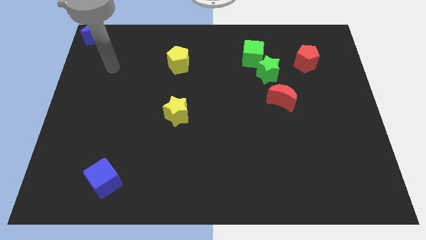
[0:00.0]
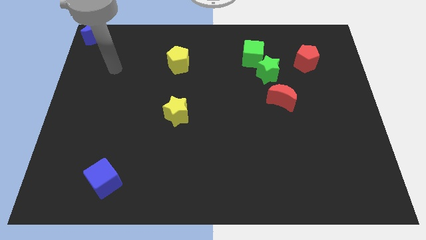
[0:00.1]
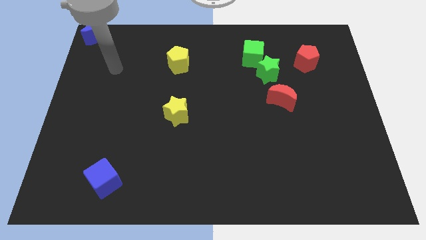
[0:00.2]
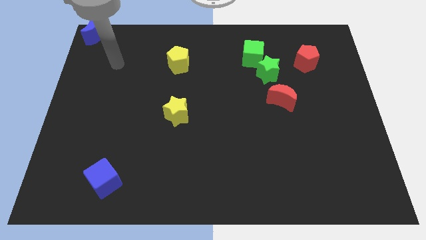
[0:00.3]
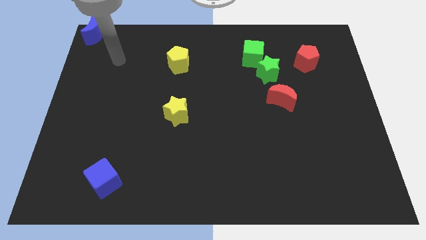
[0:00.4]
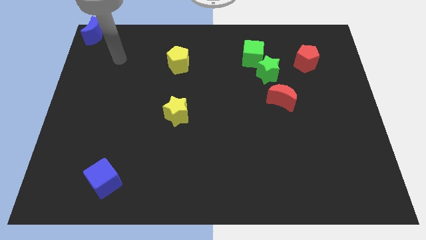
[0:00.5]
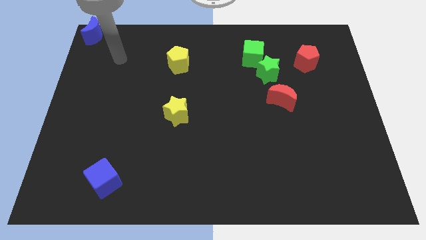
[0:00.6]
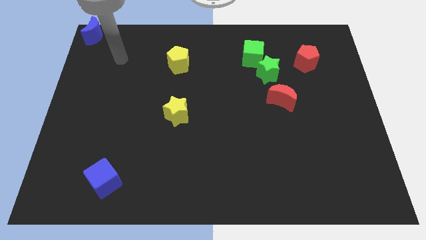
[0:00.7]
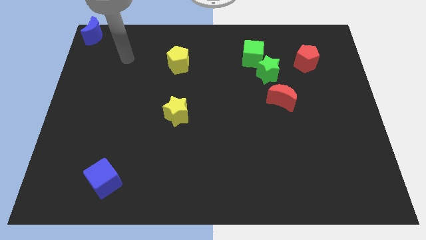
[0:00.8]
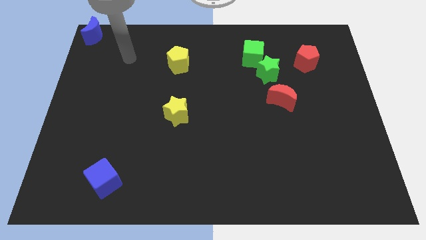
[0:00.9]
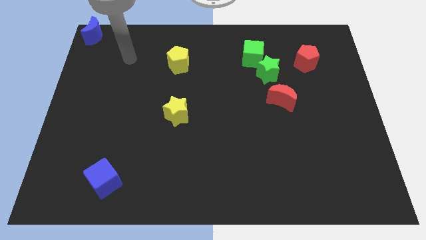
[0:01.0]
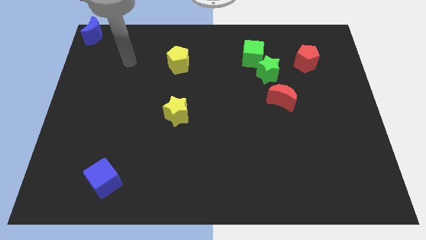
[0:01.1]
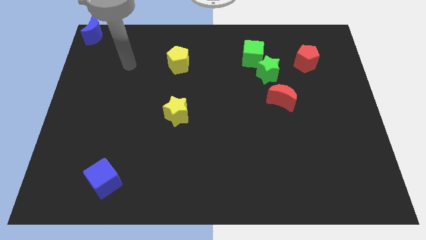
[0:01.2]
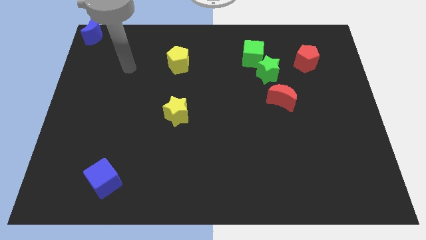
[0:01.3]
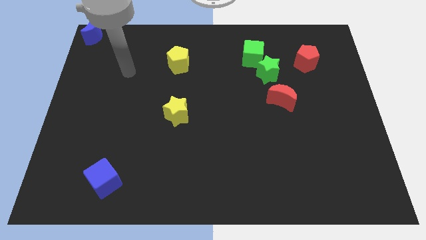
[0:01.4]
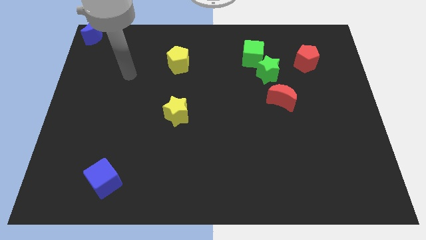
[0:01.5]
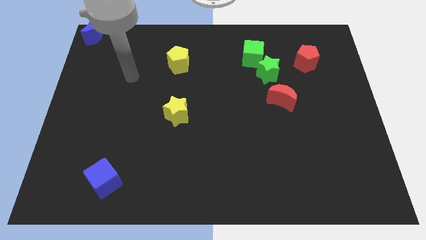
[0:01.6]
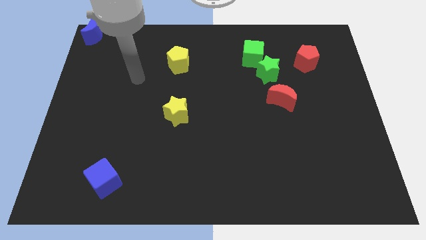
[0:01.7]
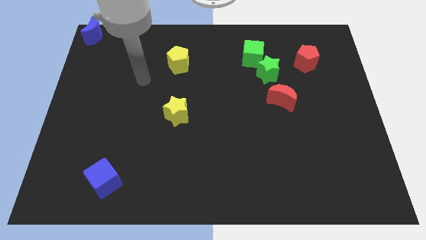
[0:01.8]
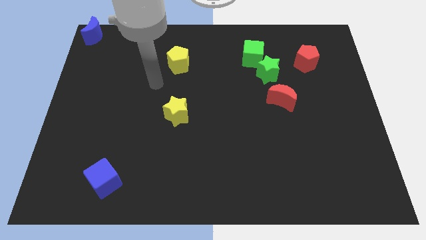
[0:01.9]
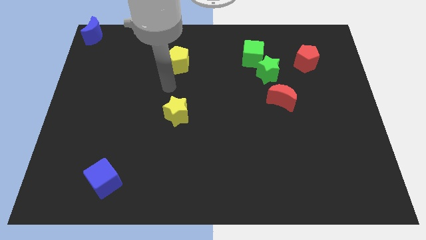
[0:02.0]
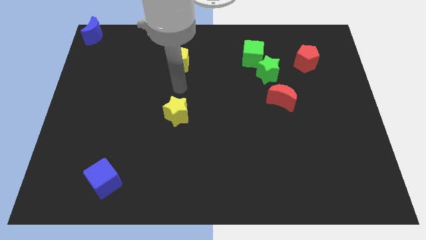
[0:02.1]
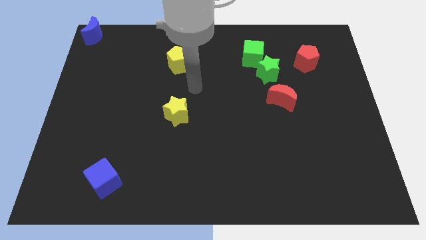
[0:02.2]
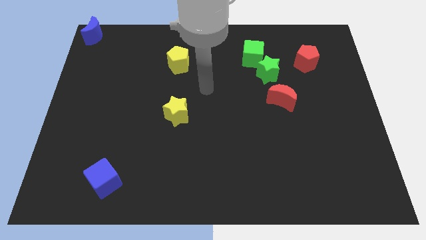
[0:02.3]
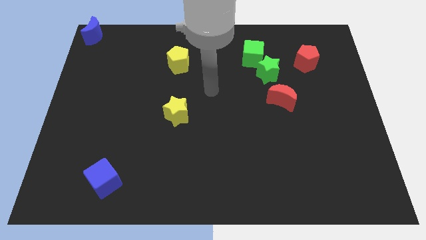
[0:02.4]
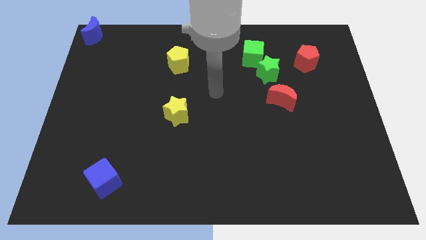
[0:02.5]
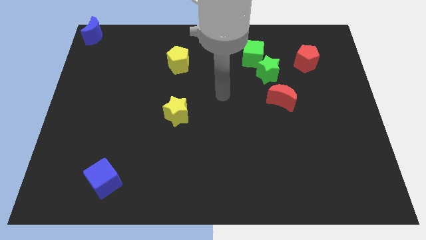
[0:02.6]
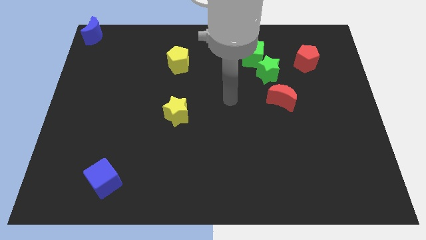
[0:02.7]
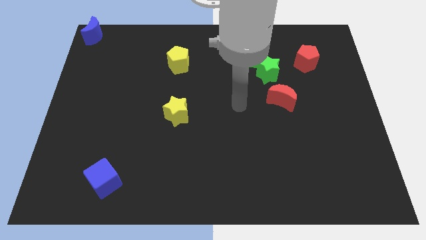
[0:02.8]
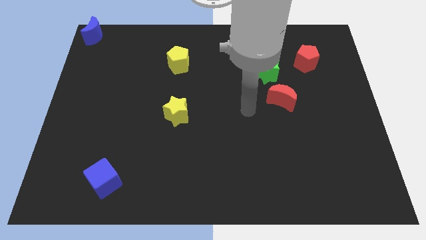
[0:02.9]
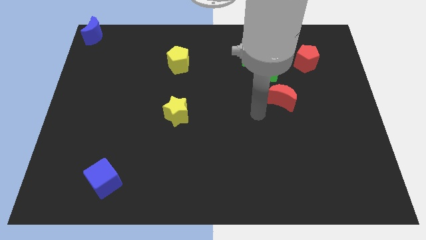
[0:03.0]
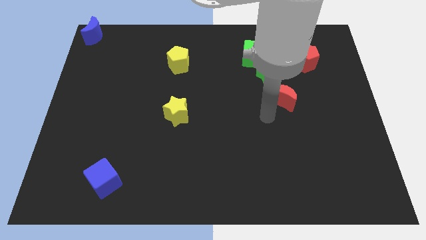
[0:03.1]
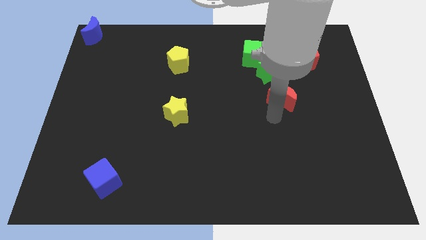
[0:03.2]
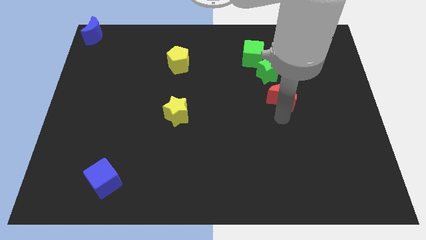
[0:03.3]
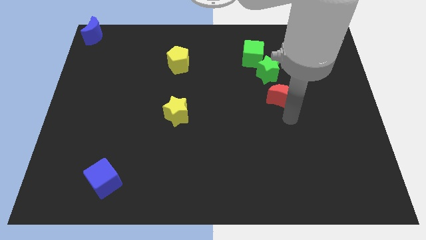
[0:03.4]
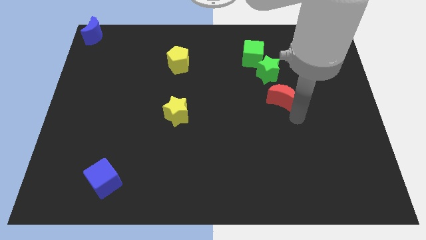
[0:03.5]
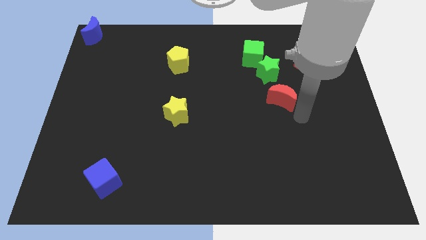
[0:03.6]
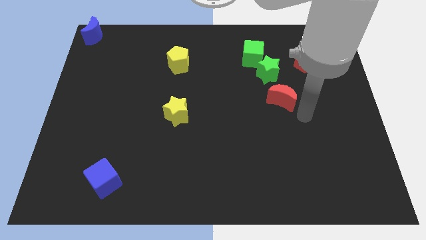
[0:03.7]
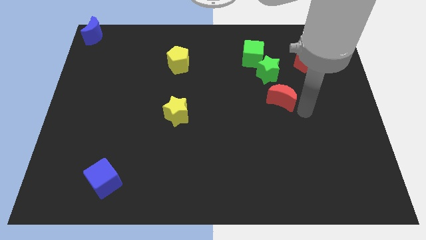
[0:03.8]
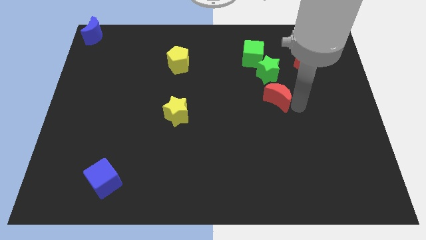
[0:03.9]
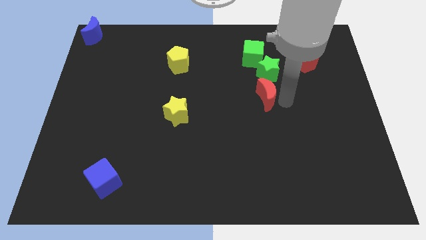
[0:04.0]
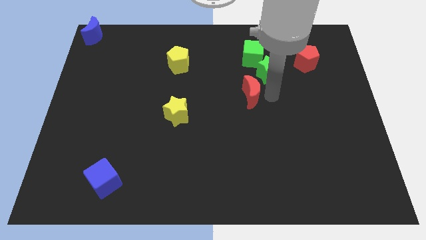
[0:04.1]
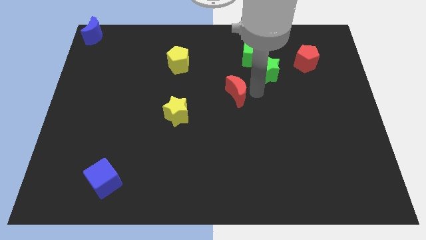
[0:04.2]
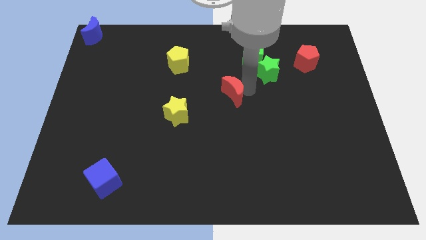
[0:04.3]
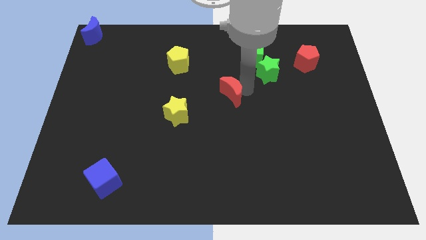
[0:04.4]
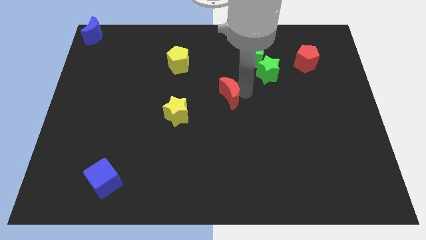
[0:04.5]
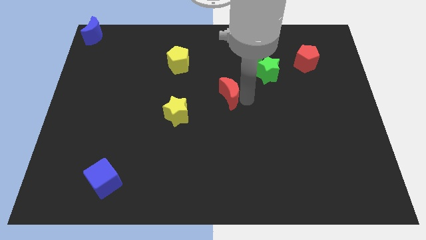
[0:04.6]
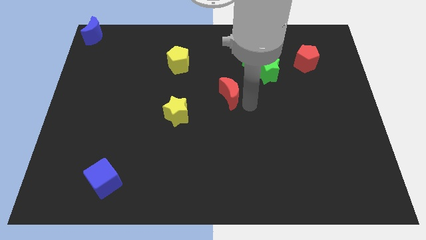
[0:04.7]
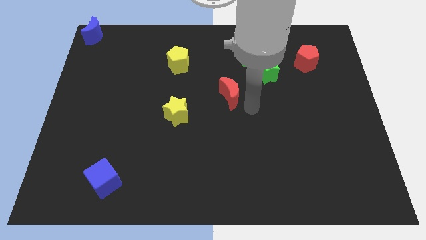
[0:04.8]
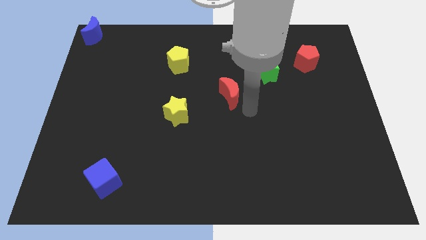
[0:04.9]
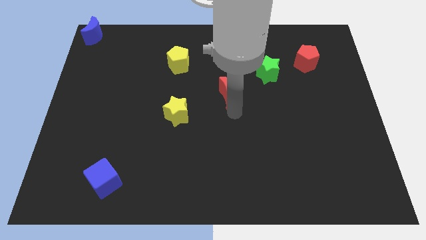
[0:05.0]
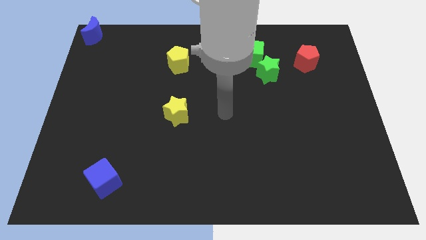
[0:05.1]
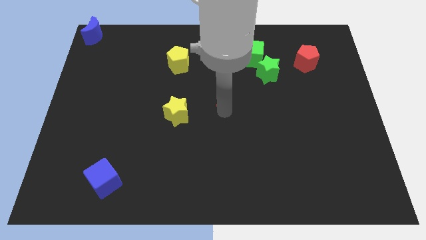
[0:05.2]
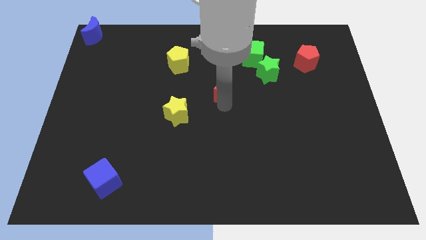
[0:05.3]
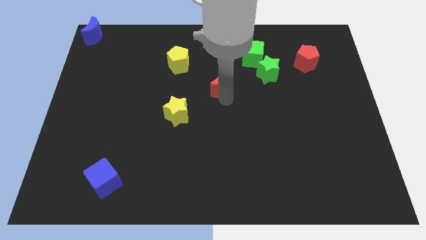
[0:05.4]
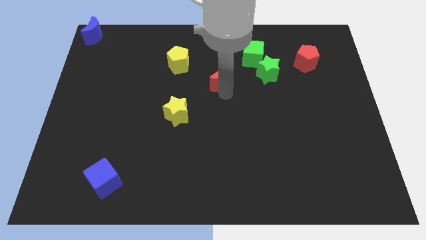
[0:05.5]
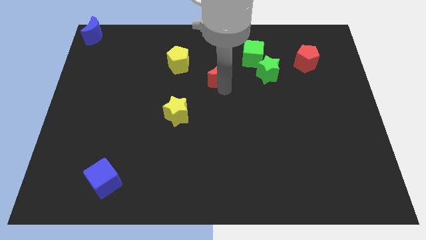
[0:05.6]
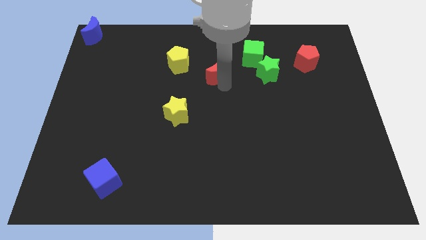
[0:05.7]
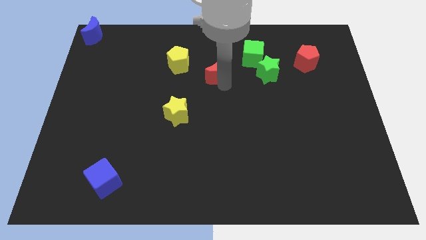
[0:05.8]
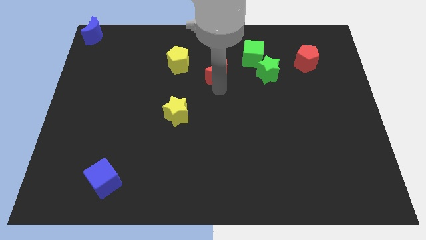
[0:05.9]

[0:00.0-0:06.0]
push the red crescent towards the yellow pentagon

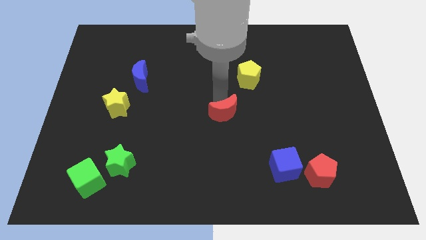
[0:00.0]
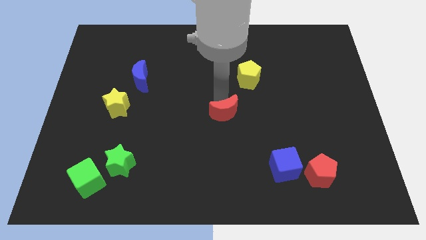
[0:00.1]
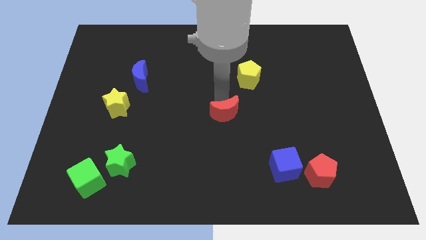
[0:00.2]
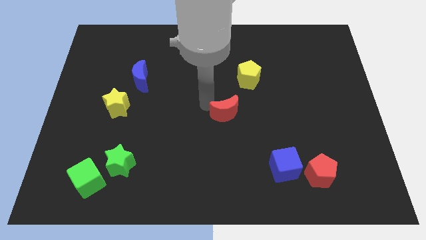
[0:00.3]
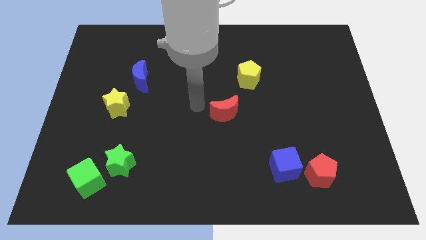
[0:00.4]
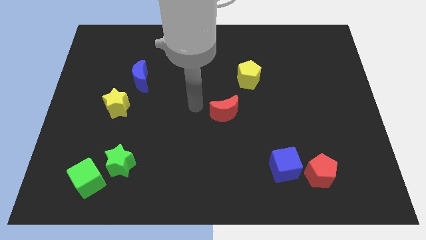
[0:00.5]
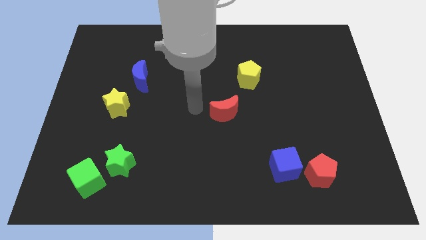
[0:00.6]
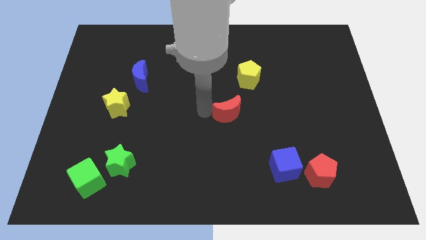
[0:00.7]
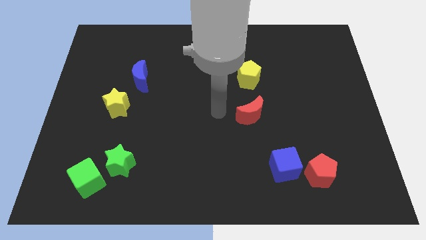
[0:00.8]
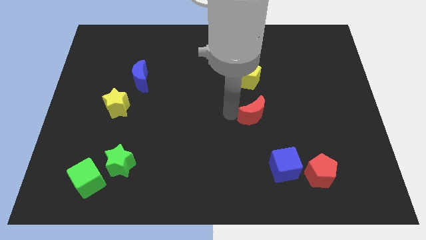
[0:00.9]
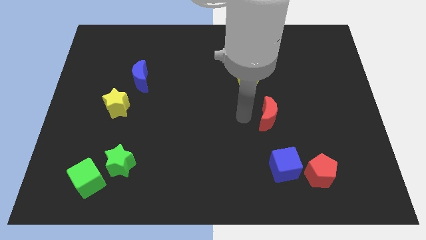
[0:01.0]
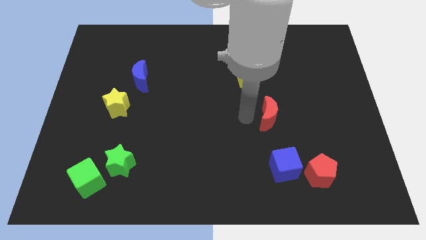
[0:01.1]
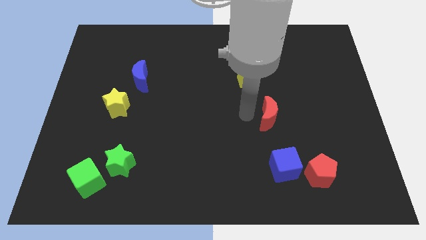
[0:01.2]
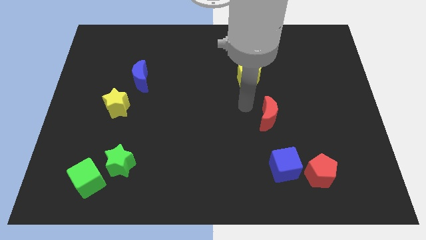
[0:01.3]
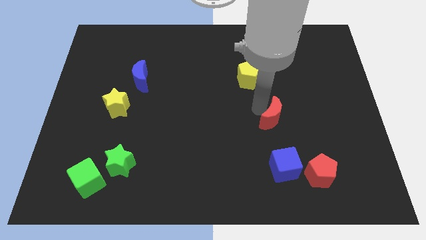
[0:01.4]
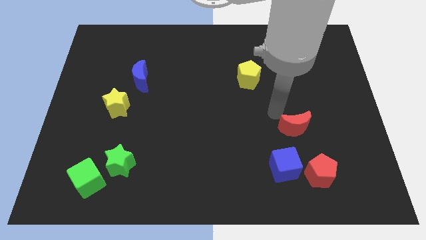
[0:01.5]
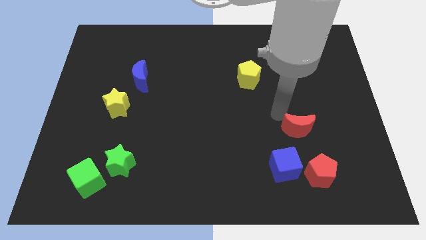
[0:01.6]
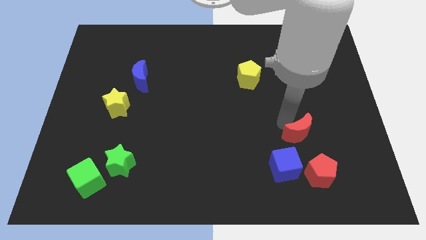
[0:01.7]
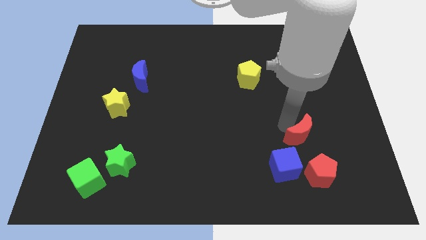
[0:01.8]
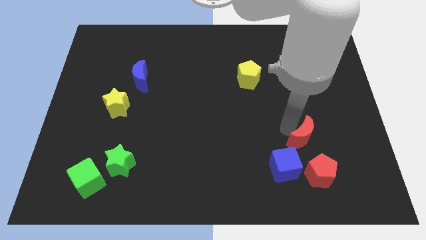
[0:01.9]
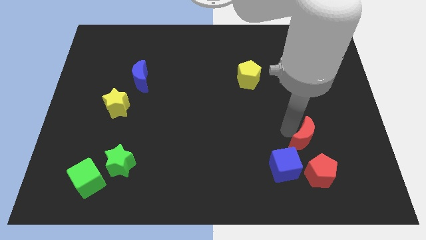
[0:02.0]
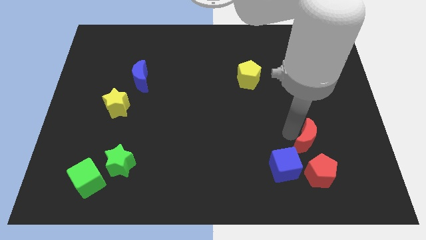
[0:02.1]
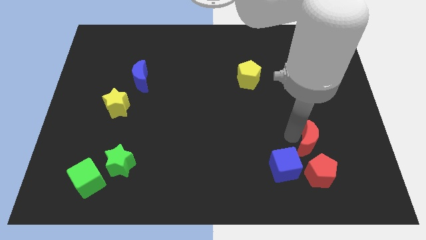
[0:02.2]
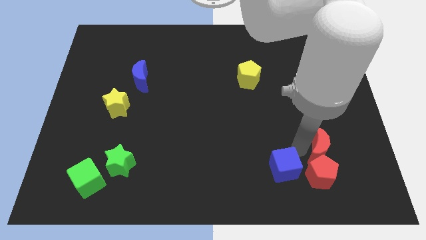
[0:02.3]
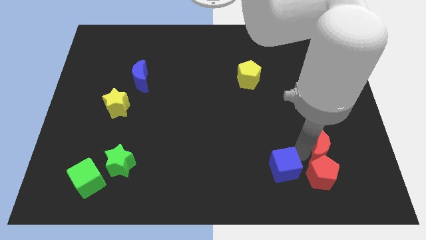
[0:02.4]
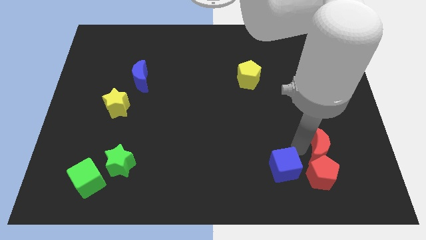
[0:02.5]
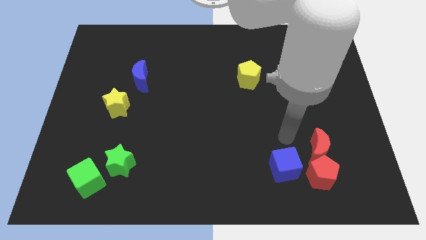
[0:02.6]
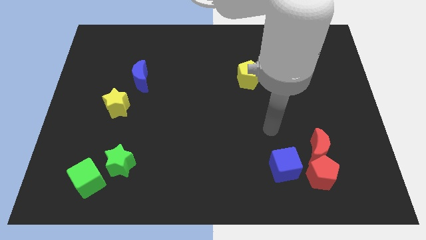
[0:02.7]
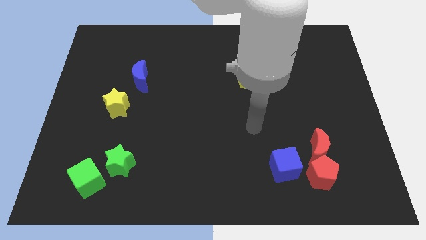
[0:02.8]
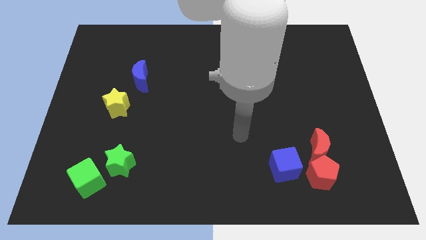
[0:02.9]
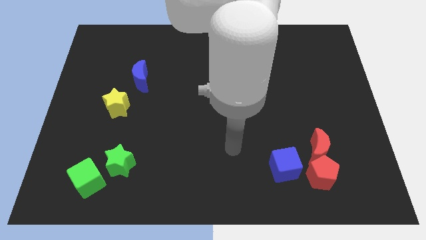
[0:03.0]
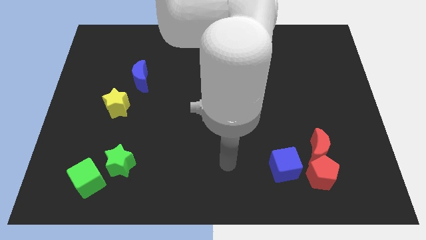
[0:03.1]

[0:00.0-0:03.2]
slide red moon on top of red pentagon
